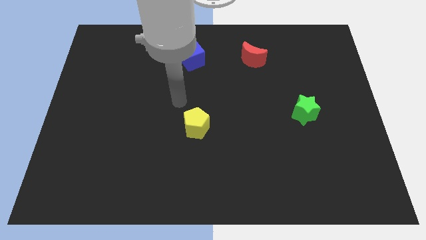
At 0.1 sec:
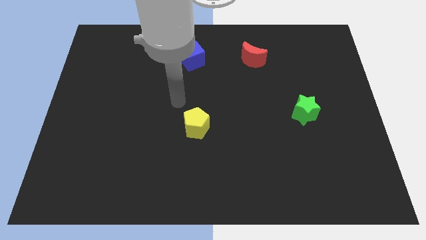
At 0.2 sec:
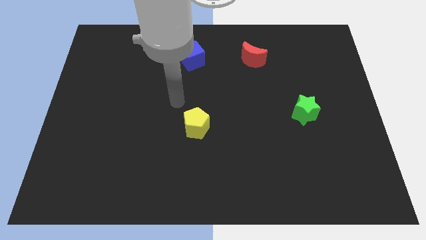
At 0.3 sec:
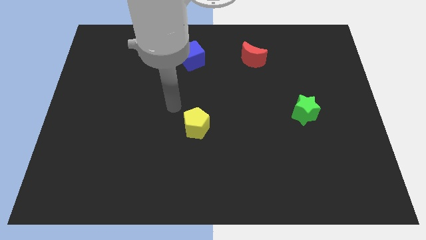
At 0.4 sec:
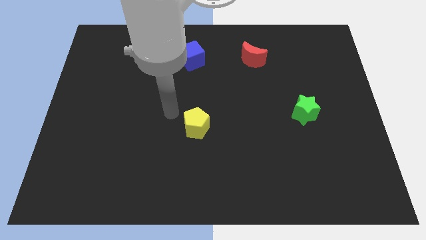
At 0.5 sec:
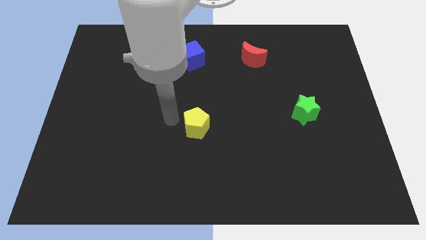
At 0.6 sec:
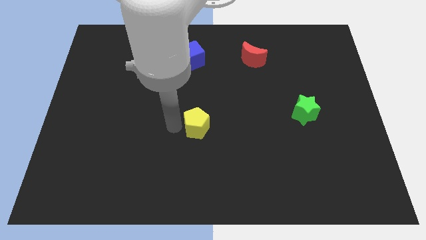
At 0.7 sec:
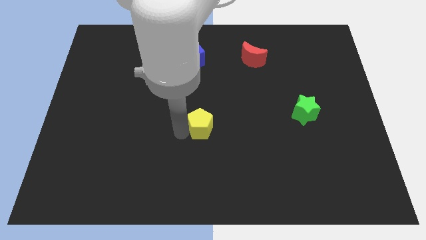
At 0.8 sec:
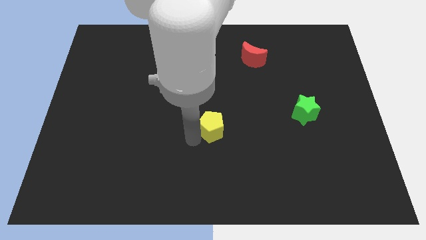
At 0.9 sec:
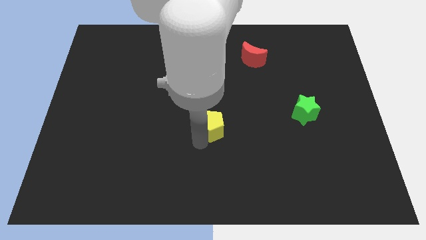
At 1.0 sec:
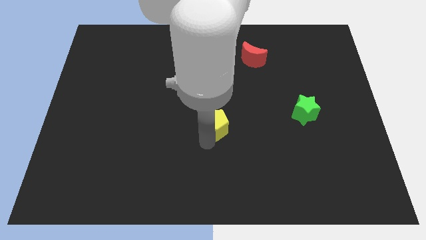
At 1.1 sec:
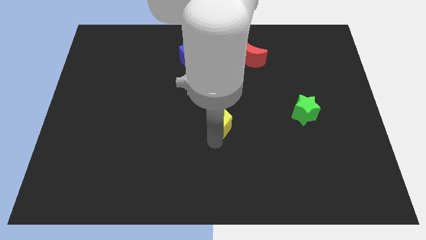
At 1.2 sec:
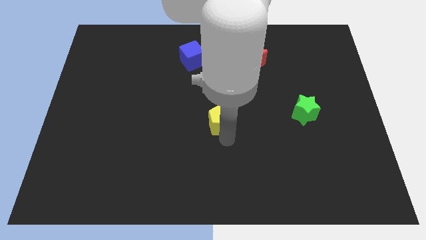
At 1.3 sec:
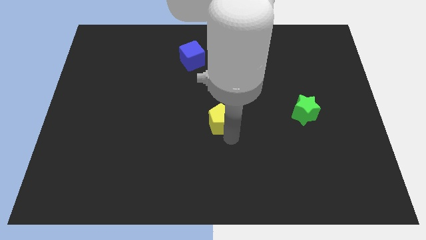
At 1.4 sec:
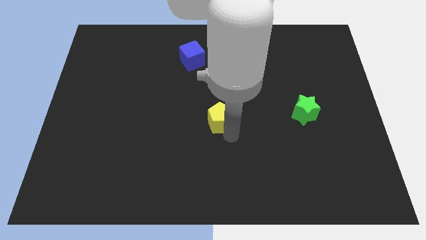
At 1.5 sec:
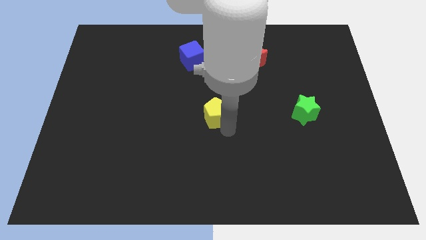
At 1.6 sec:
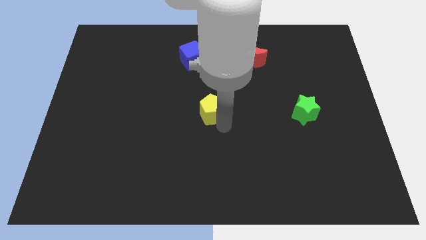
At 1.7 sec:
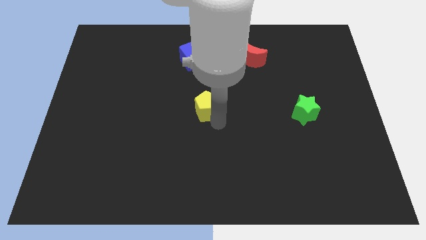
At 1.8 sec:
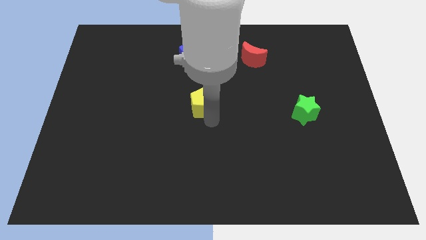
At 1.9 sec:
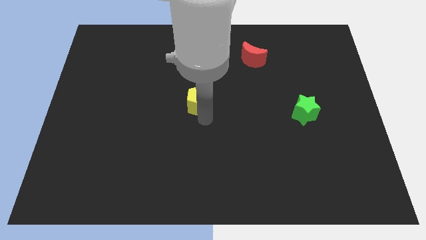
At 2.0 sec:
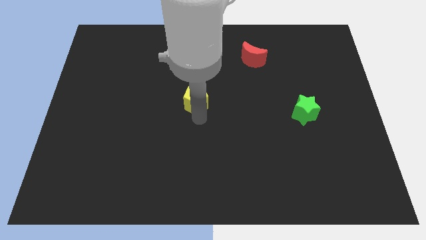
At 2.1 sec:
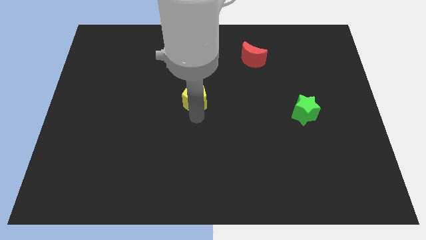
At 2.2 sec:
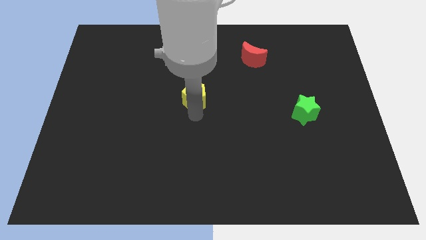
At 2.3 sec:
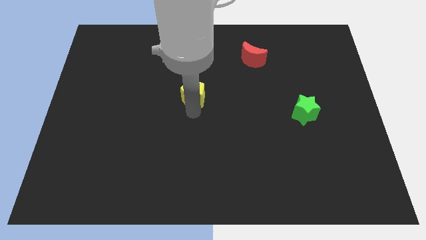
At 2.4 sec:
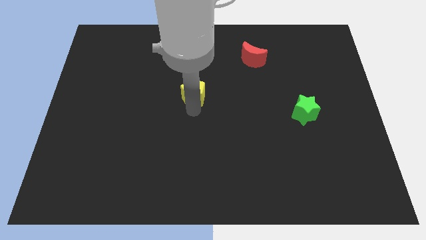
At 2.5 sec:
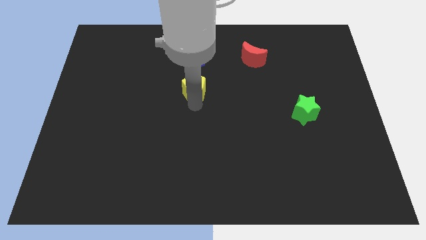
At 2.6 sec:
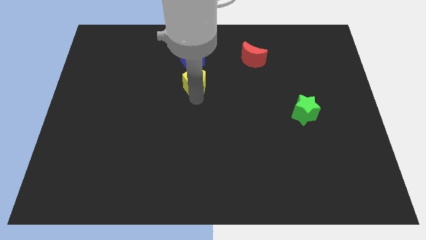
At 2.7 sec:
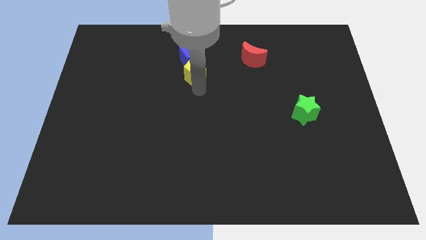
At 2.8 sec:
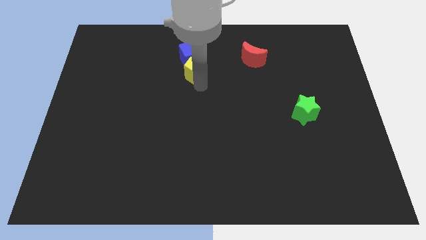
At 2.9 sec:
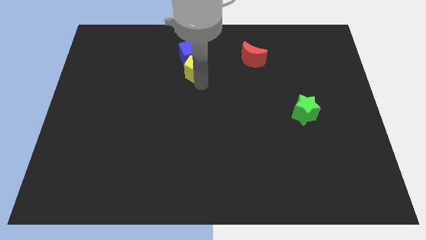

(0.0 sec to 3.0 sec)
move the yellow pentagon towards the blue block

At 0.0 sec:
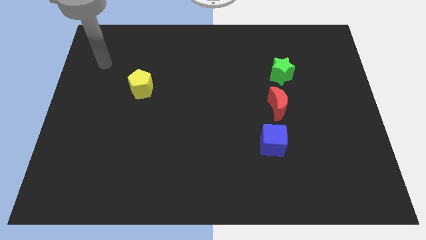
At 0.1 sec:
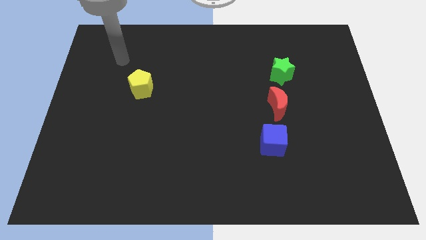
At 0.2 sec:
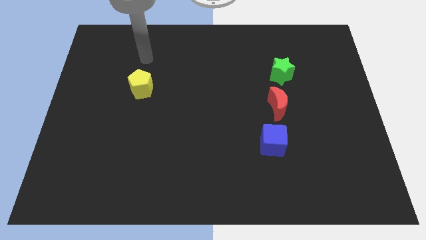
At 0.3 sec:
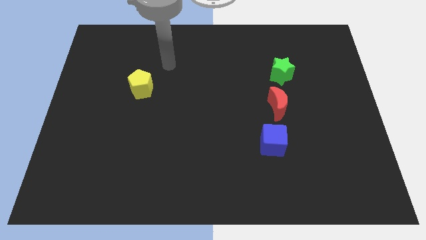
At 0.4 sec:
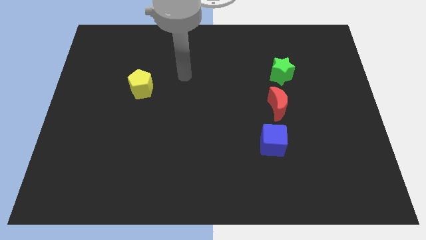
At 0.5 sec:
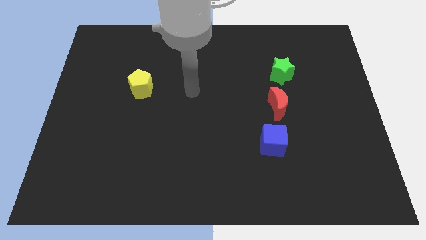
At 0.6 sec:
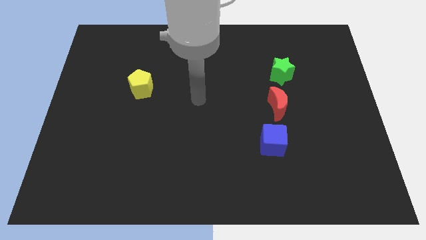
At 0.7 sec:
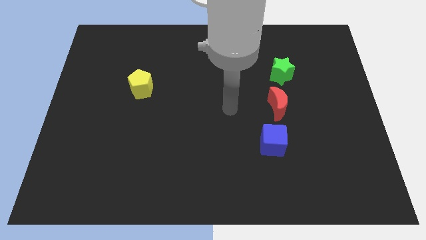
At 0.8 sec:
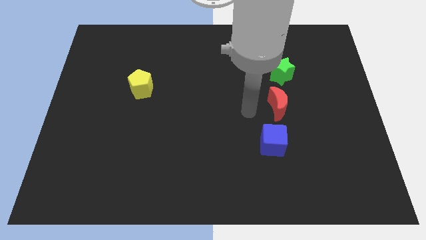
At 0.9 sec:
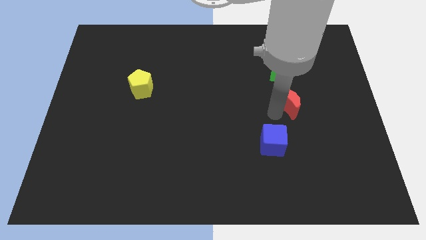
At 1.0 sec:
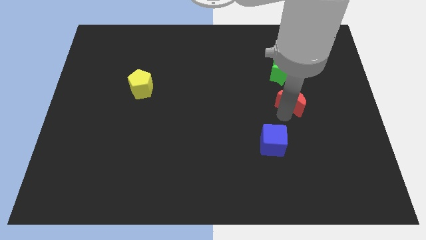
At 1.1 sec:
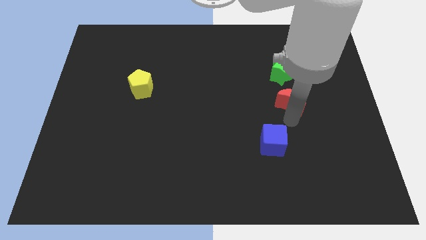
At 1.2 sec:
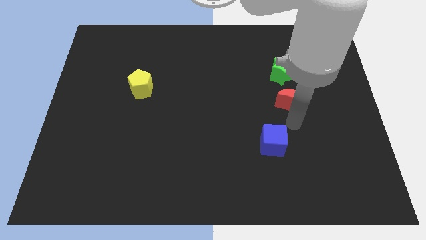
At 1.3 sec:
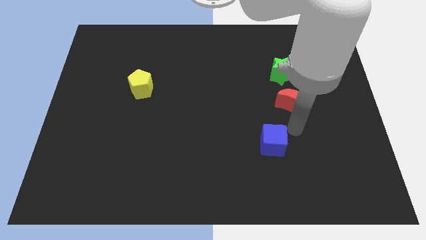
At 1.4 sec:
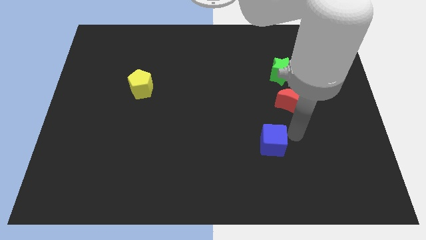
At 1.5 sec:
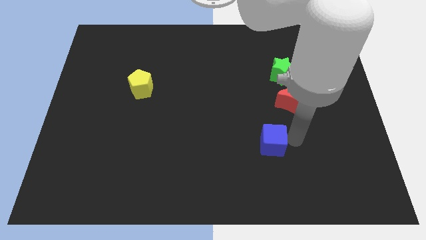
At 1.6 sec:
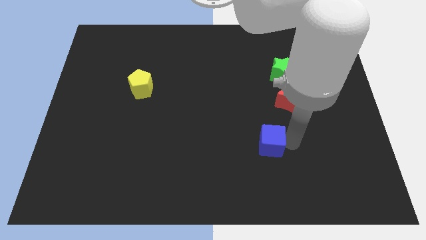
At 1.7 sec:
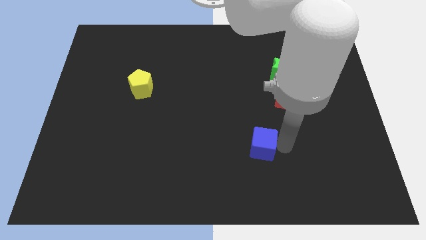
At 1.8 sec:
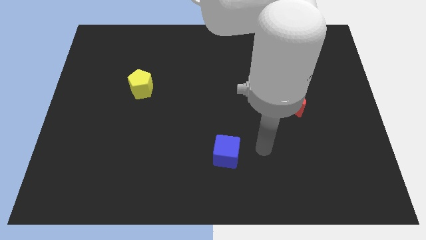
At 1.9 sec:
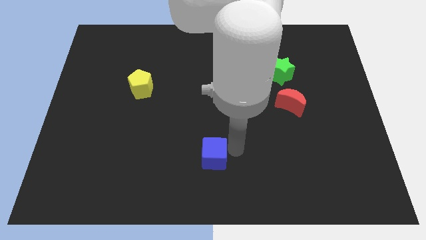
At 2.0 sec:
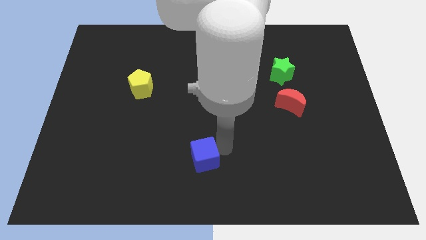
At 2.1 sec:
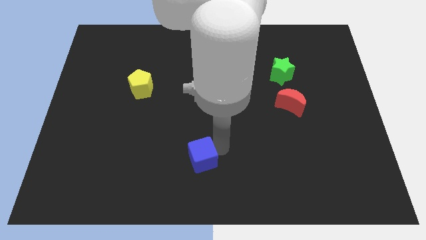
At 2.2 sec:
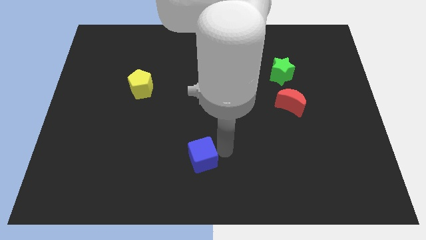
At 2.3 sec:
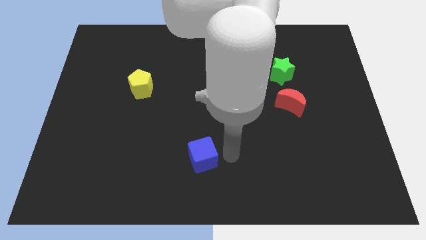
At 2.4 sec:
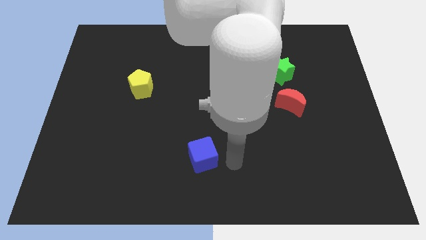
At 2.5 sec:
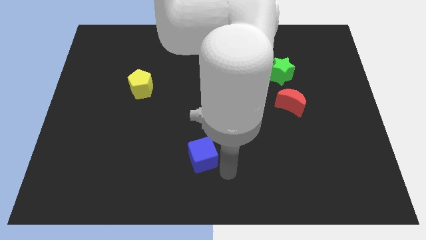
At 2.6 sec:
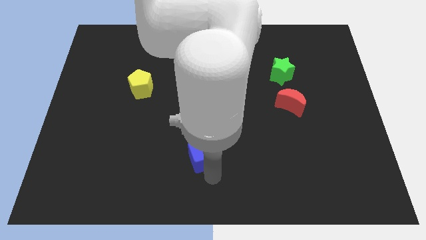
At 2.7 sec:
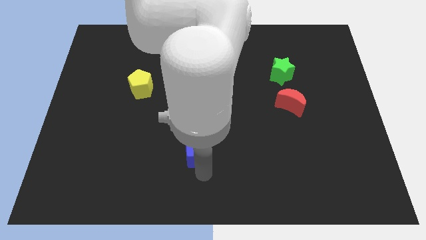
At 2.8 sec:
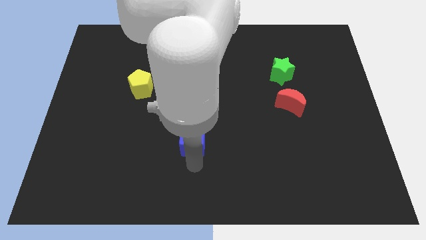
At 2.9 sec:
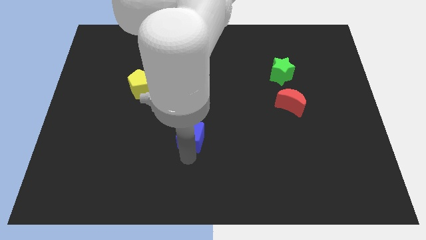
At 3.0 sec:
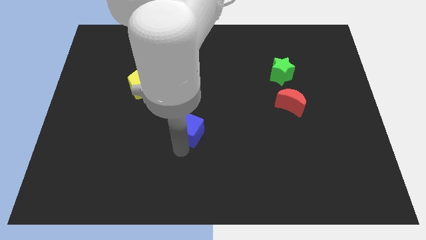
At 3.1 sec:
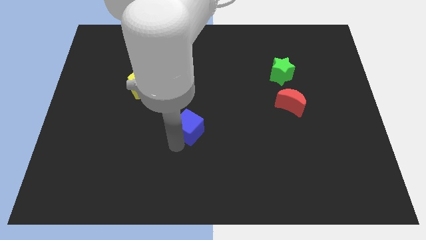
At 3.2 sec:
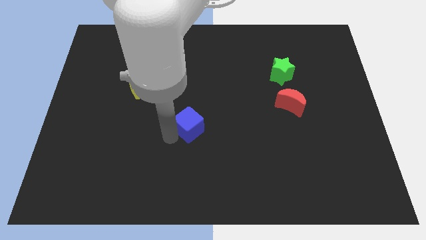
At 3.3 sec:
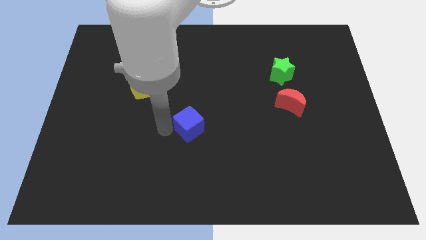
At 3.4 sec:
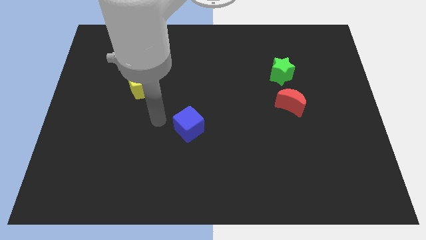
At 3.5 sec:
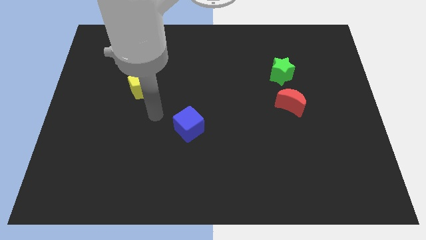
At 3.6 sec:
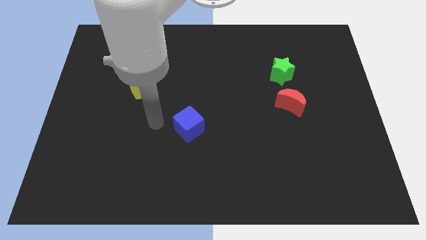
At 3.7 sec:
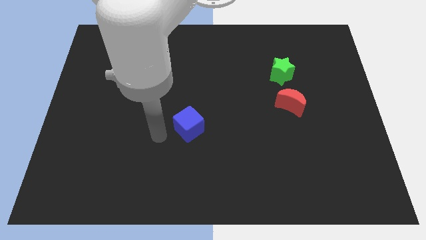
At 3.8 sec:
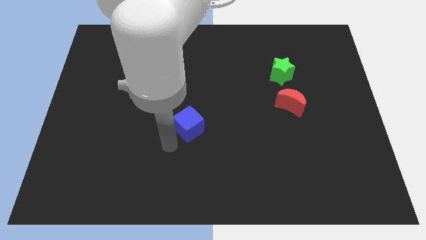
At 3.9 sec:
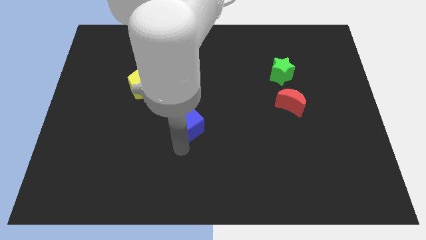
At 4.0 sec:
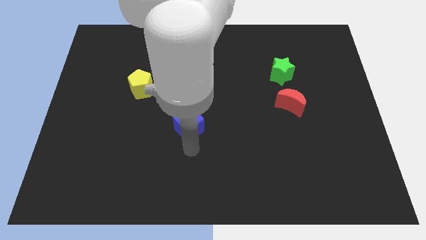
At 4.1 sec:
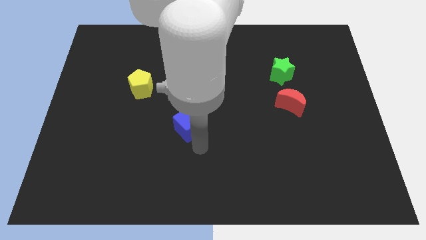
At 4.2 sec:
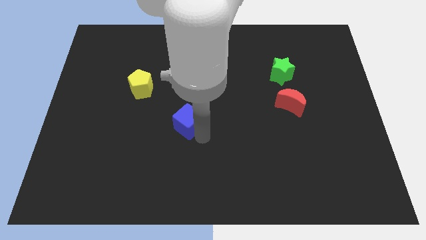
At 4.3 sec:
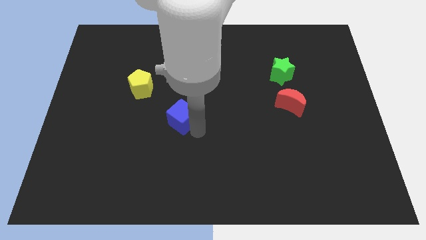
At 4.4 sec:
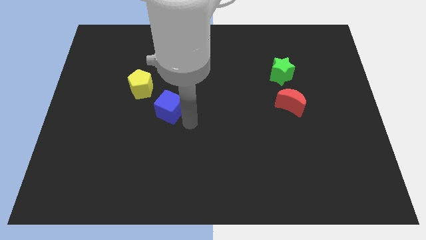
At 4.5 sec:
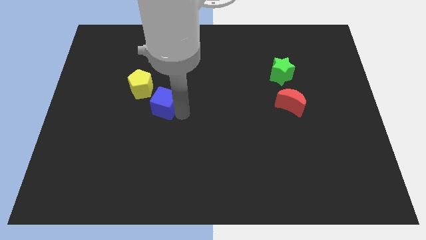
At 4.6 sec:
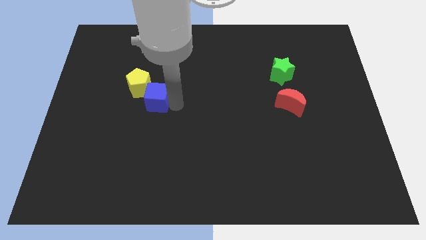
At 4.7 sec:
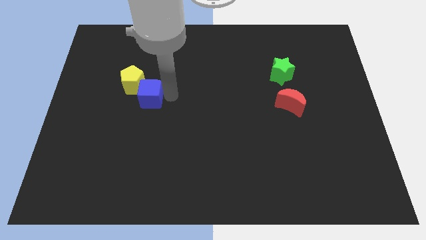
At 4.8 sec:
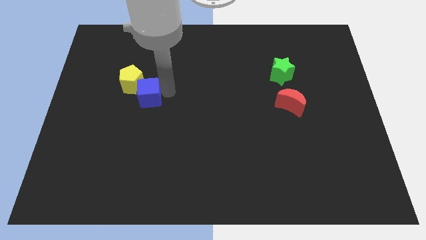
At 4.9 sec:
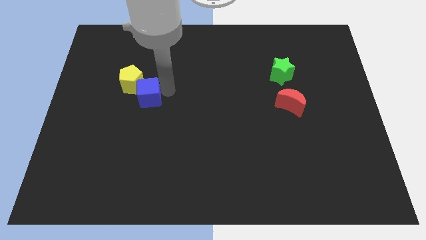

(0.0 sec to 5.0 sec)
slide the cube to the yellow pentagon

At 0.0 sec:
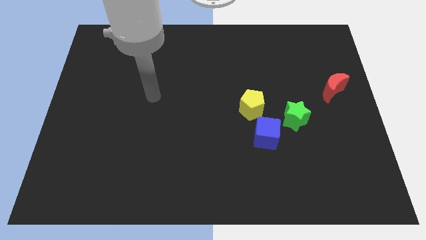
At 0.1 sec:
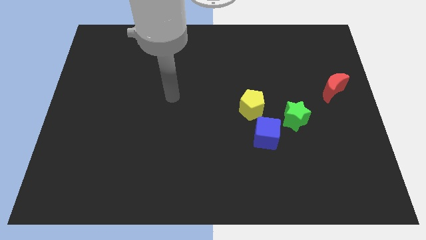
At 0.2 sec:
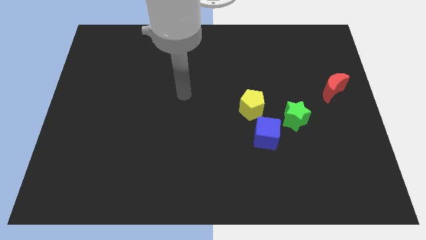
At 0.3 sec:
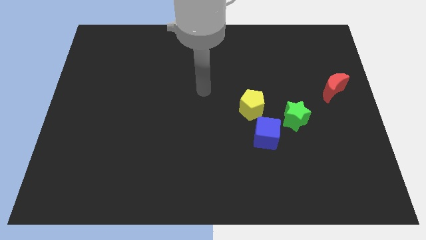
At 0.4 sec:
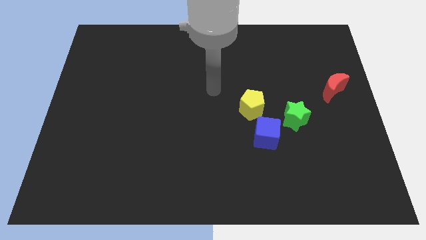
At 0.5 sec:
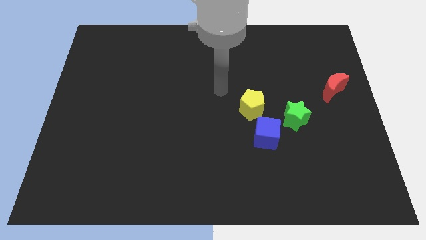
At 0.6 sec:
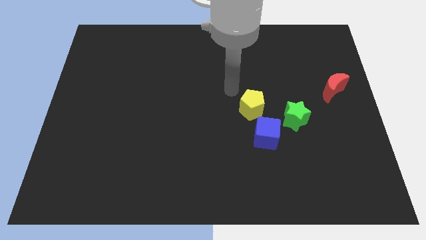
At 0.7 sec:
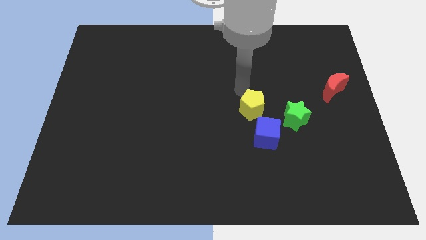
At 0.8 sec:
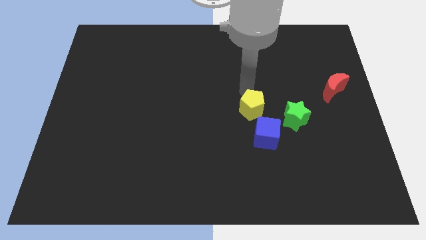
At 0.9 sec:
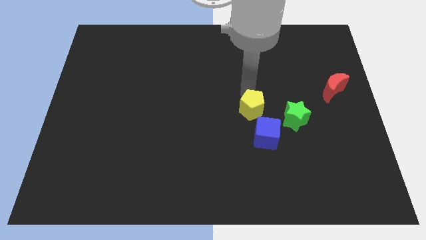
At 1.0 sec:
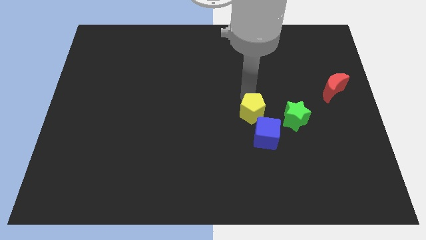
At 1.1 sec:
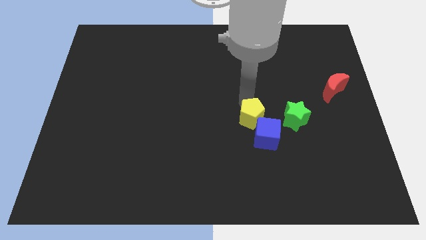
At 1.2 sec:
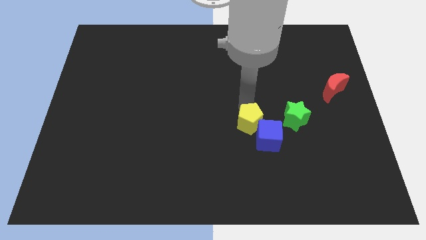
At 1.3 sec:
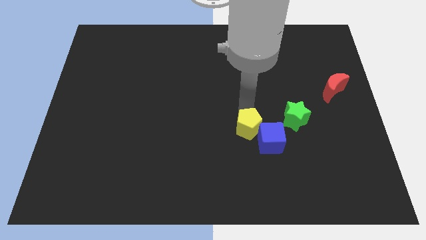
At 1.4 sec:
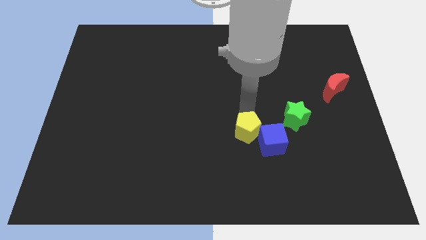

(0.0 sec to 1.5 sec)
move the yellow block next to the blue block
